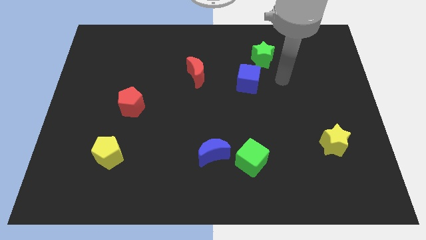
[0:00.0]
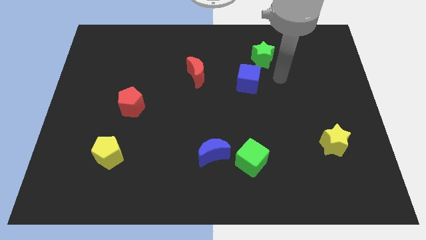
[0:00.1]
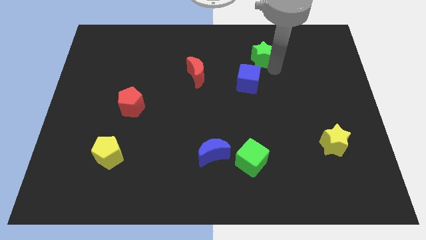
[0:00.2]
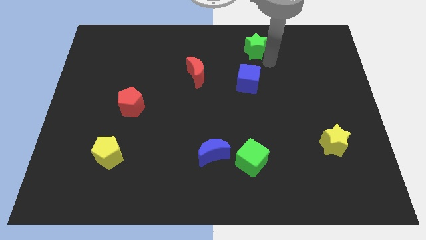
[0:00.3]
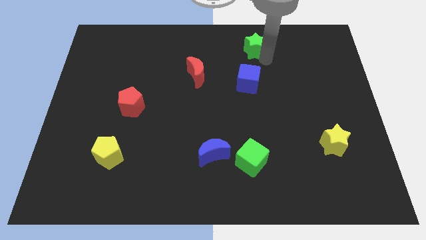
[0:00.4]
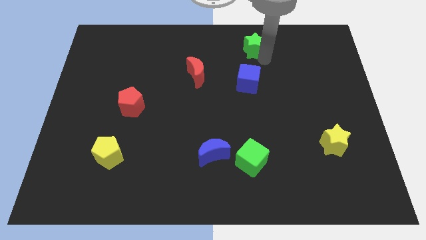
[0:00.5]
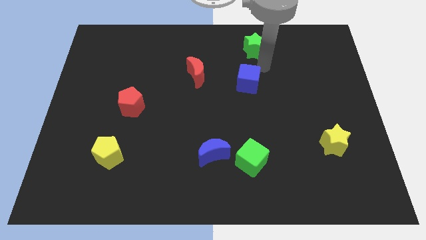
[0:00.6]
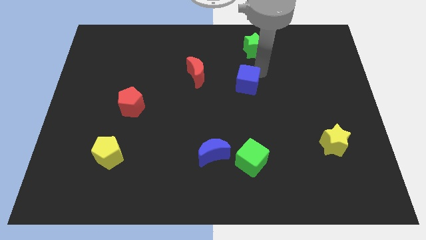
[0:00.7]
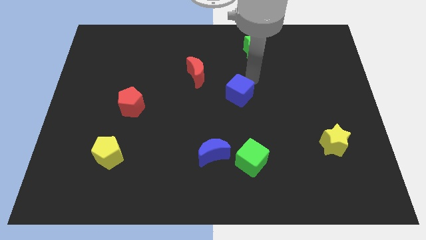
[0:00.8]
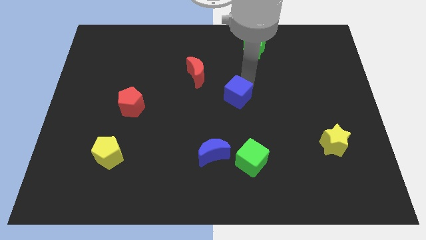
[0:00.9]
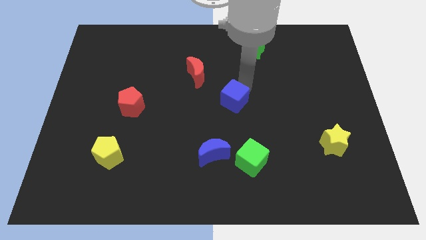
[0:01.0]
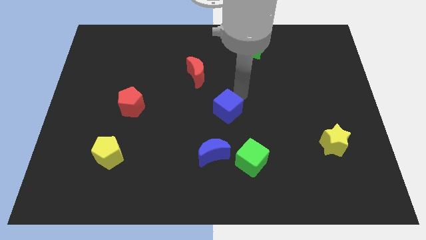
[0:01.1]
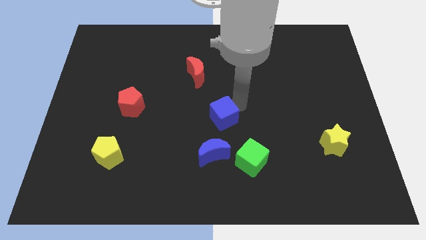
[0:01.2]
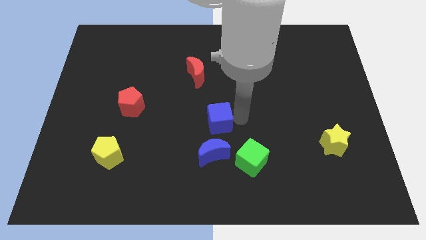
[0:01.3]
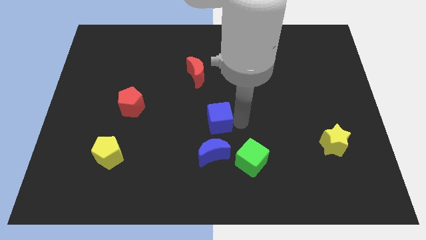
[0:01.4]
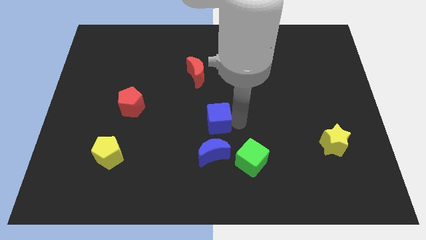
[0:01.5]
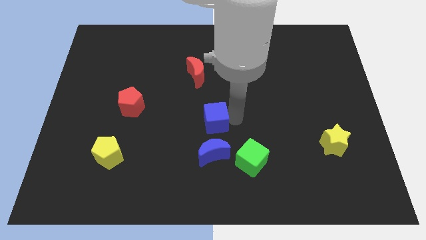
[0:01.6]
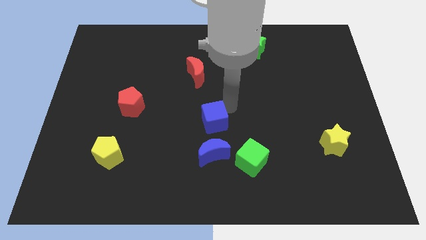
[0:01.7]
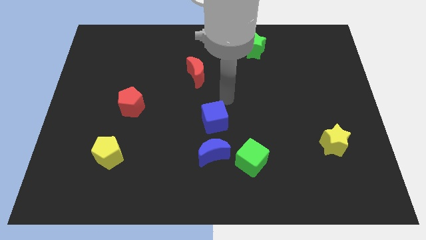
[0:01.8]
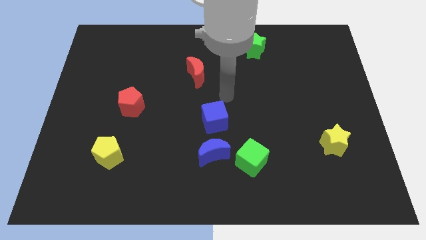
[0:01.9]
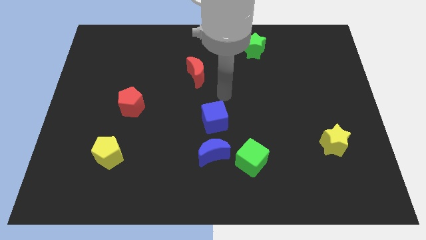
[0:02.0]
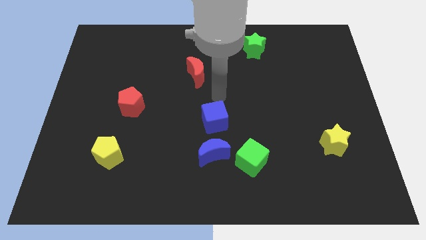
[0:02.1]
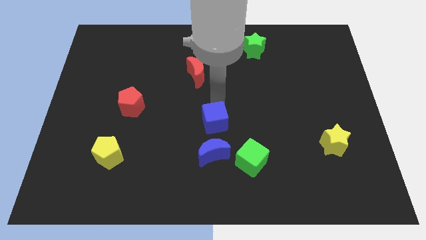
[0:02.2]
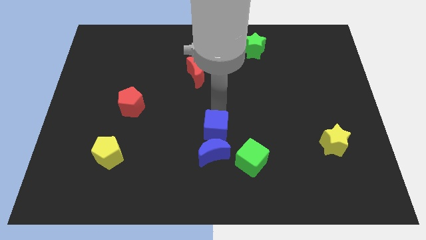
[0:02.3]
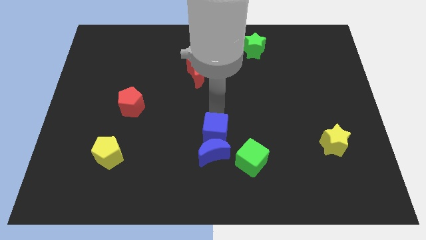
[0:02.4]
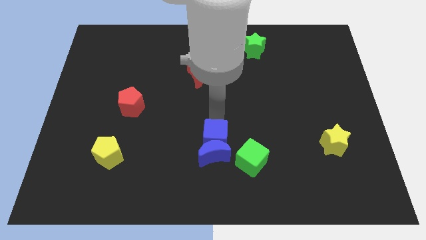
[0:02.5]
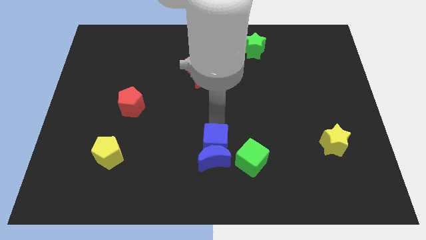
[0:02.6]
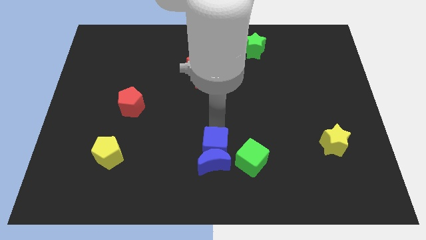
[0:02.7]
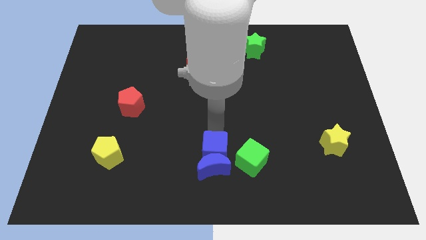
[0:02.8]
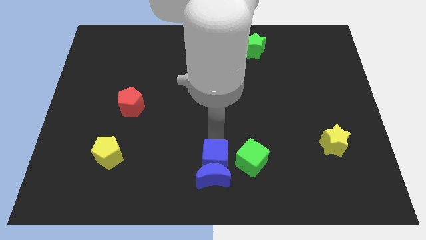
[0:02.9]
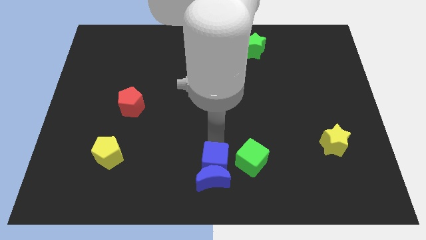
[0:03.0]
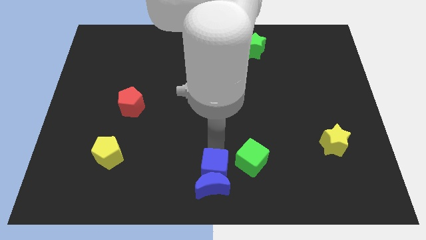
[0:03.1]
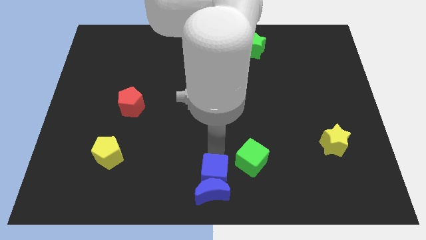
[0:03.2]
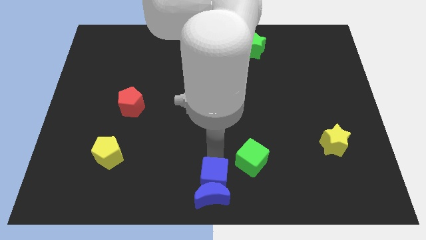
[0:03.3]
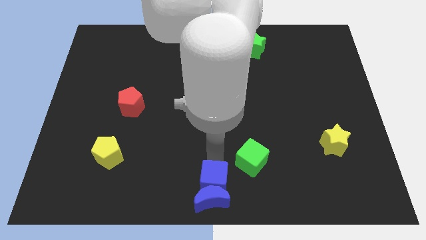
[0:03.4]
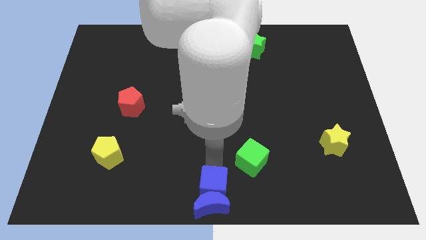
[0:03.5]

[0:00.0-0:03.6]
push the blue blocks to the bottom center of the board

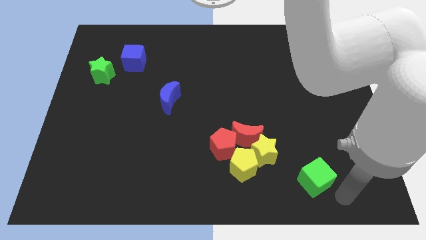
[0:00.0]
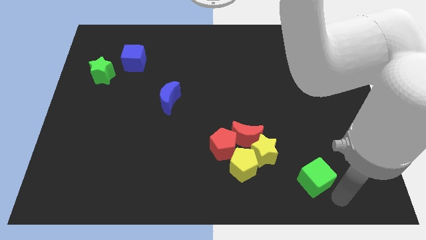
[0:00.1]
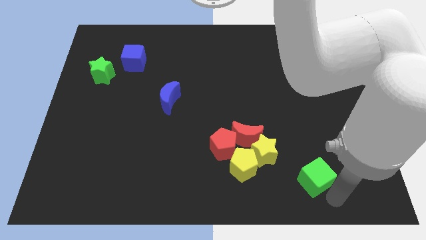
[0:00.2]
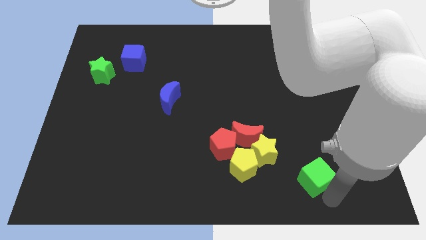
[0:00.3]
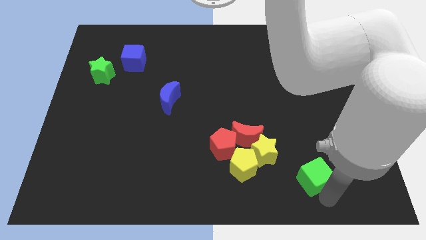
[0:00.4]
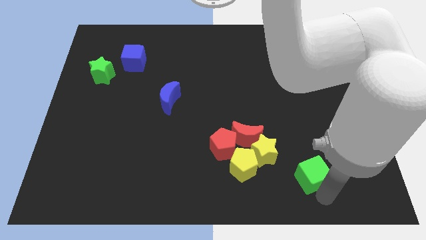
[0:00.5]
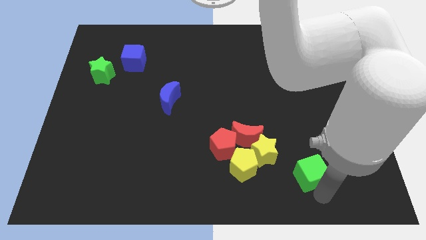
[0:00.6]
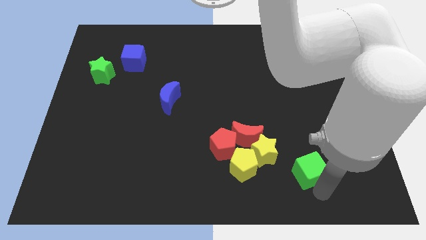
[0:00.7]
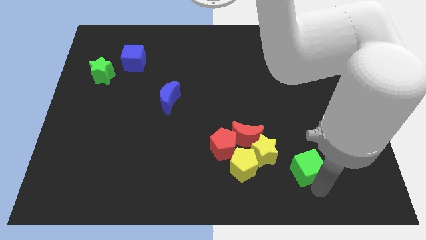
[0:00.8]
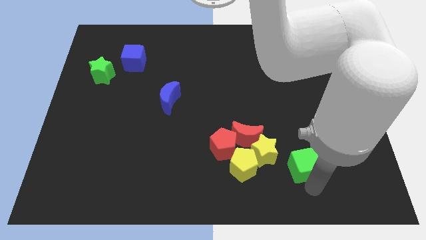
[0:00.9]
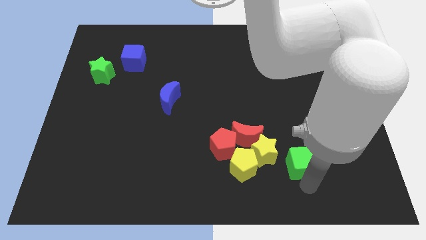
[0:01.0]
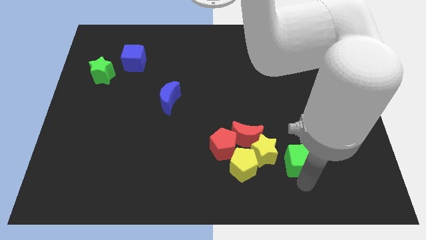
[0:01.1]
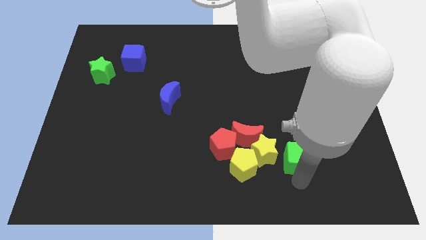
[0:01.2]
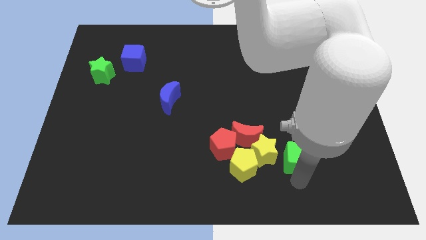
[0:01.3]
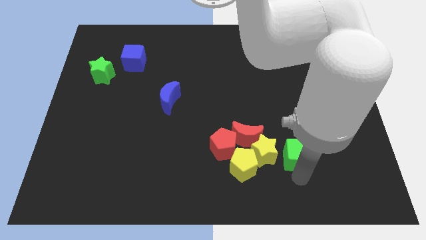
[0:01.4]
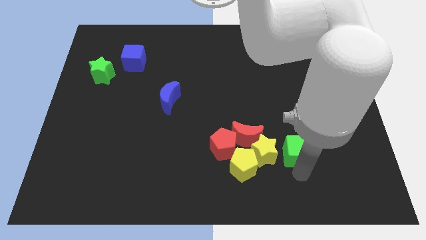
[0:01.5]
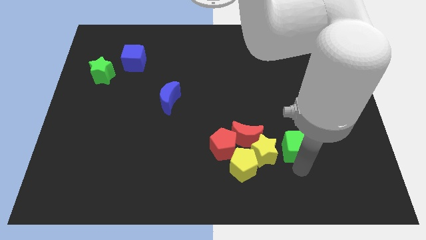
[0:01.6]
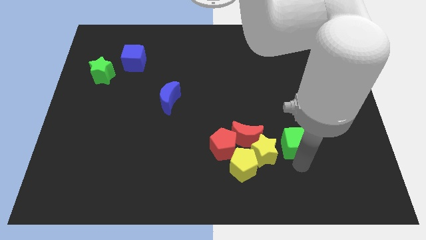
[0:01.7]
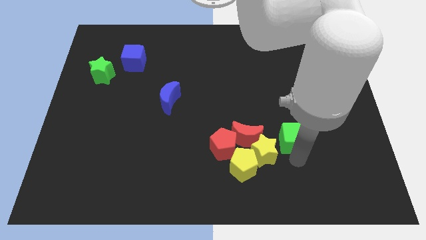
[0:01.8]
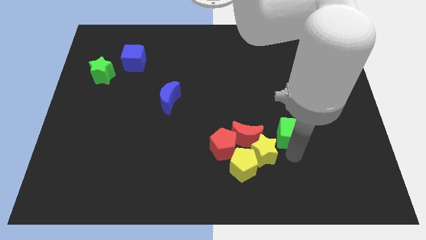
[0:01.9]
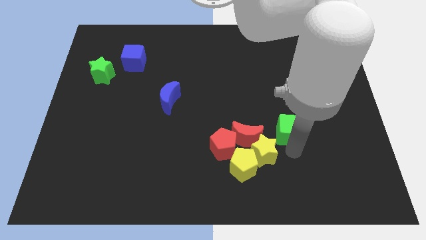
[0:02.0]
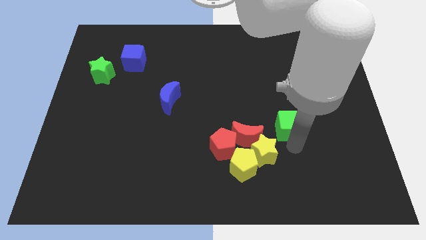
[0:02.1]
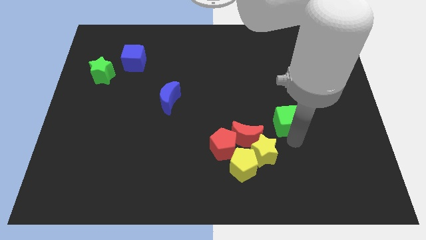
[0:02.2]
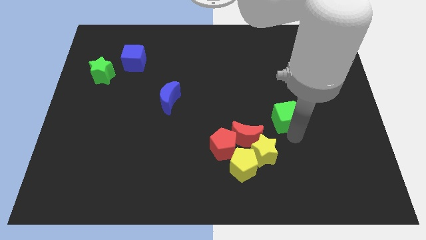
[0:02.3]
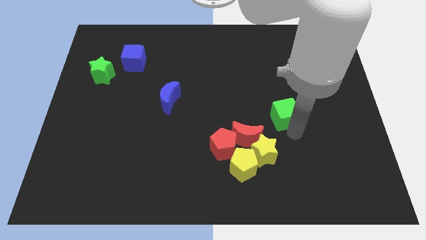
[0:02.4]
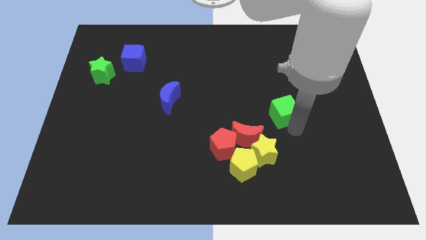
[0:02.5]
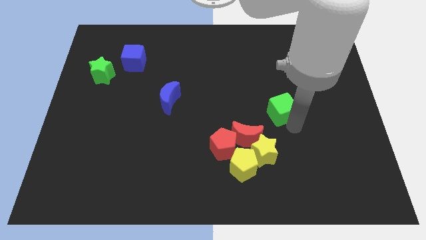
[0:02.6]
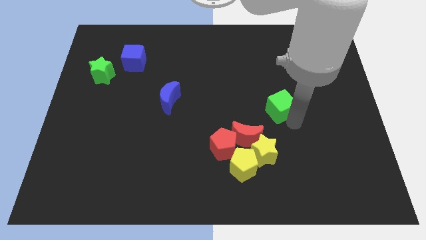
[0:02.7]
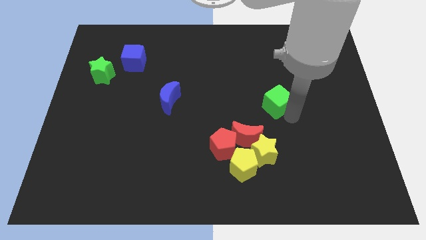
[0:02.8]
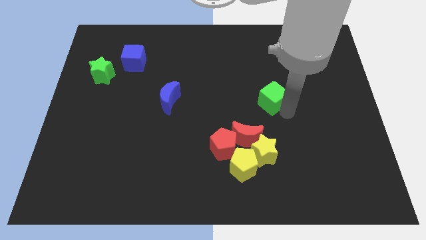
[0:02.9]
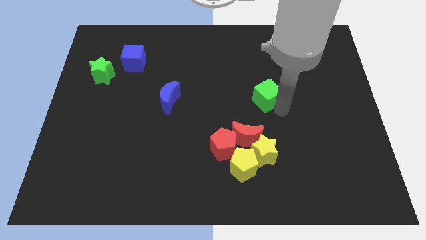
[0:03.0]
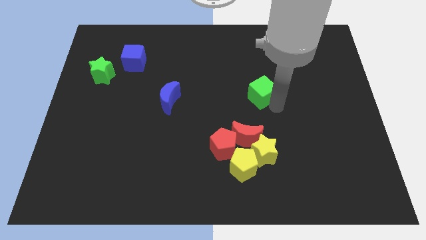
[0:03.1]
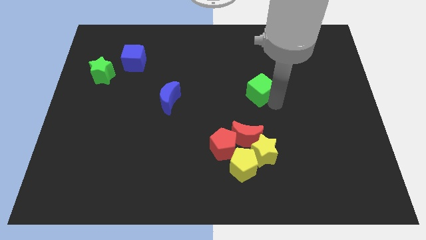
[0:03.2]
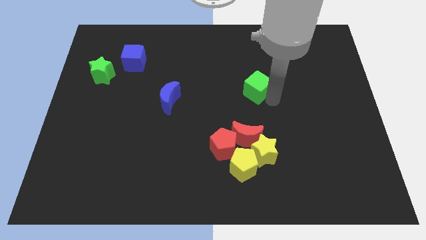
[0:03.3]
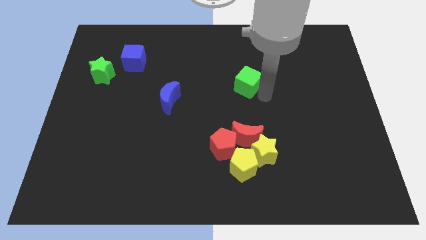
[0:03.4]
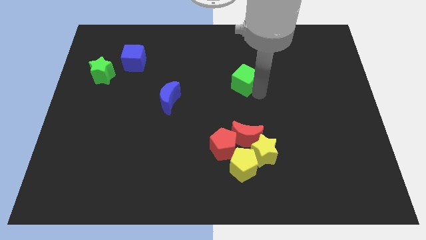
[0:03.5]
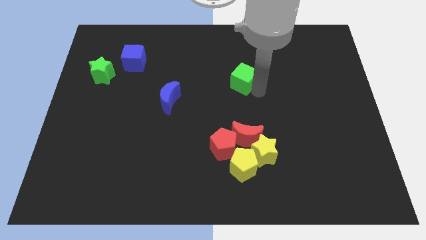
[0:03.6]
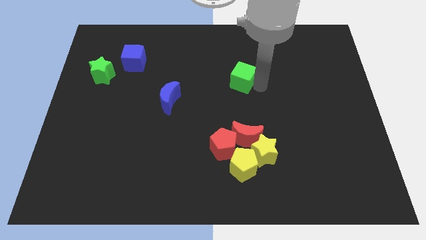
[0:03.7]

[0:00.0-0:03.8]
push the green cube to the center of the board

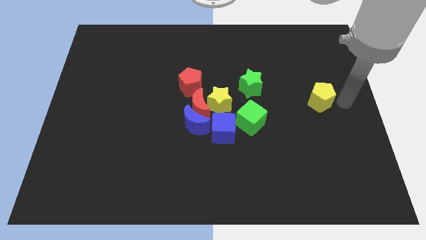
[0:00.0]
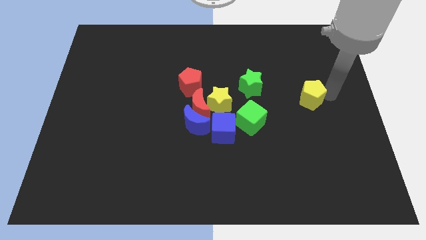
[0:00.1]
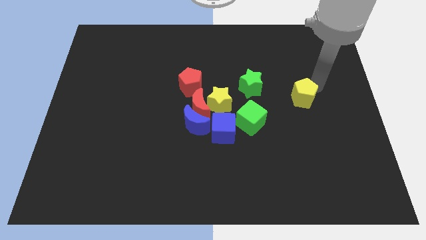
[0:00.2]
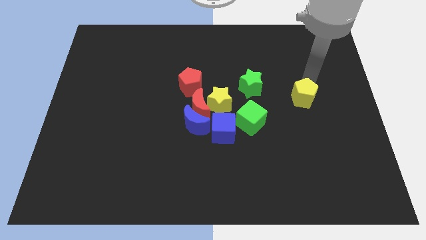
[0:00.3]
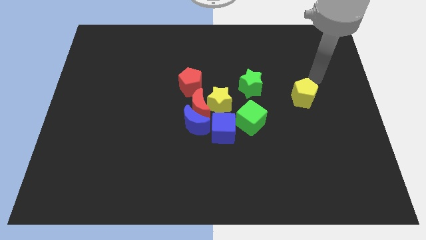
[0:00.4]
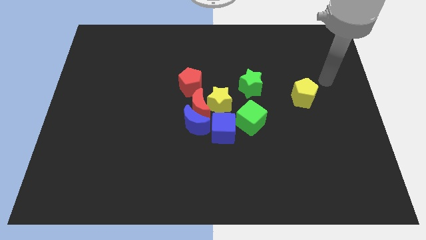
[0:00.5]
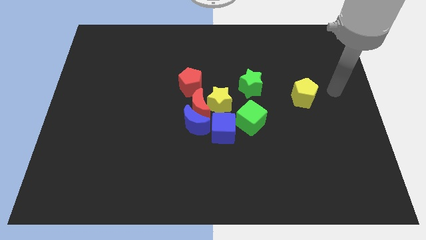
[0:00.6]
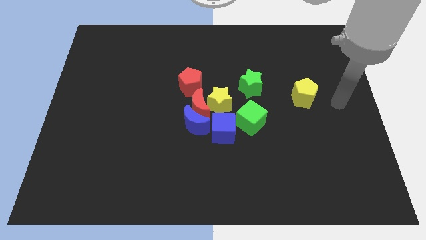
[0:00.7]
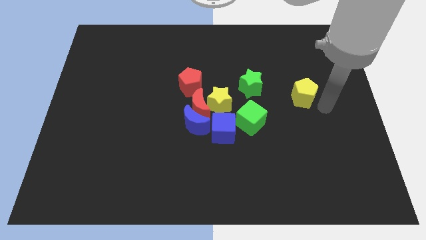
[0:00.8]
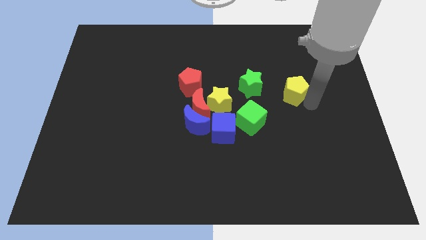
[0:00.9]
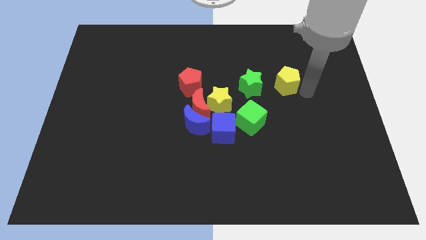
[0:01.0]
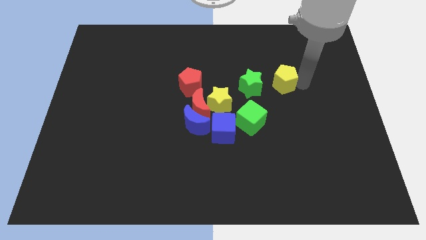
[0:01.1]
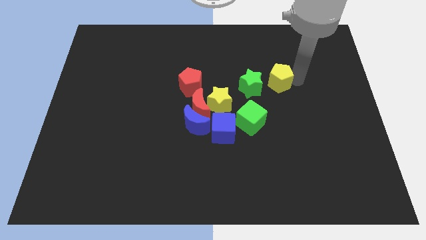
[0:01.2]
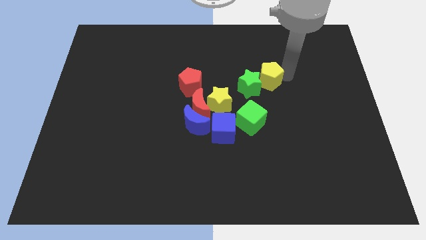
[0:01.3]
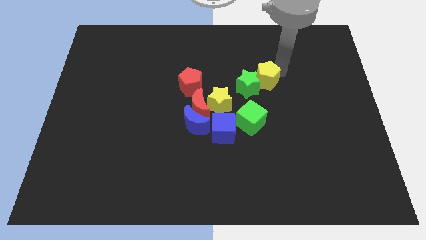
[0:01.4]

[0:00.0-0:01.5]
place yellow pentagon to the right side of green star

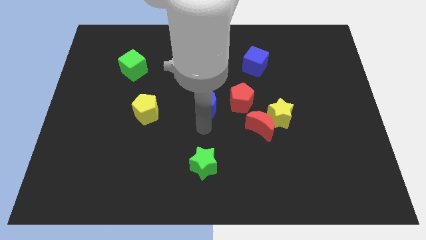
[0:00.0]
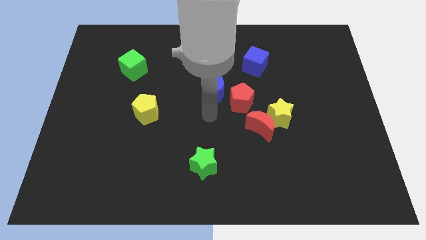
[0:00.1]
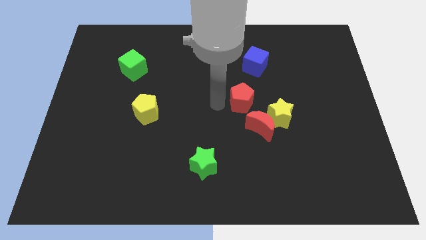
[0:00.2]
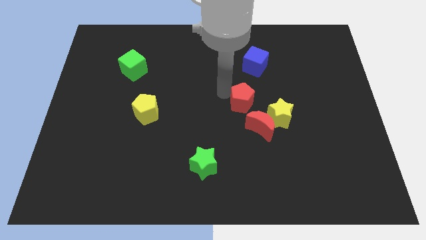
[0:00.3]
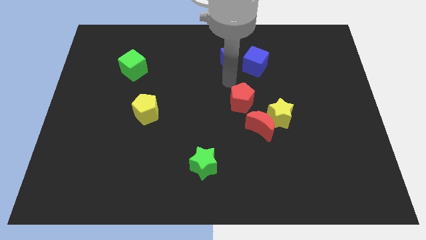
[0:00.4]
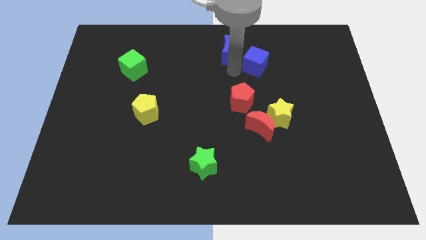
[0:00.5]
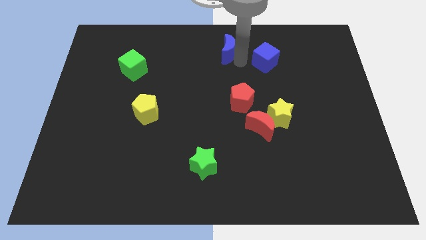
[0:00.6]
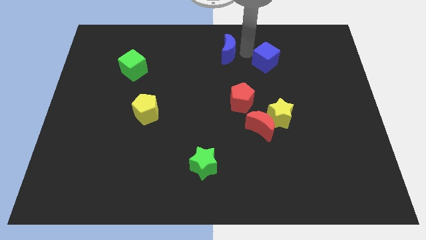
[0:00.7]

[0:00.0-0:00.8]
place the blue moon to the left side of the blue cube
